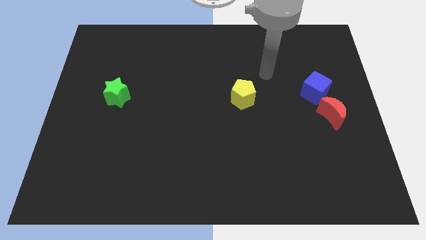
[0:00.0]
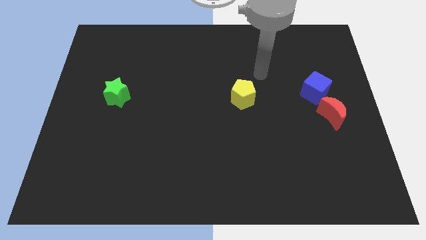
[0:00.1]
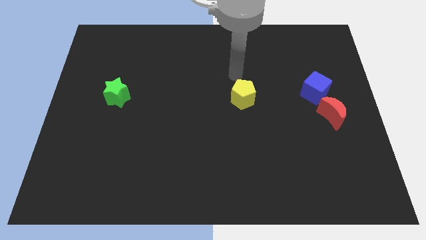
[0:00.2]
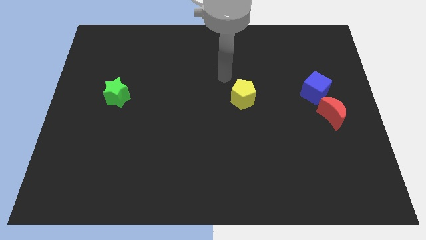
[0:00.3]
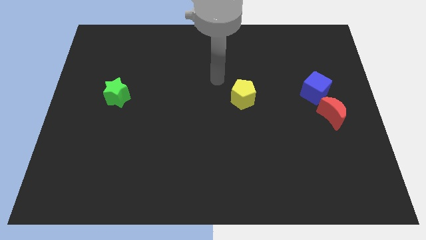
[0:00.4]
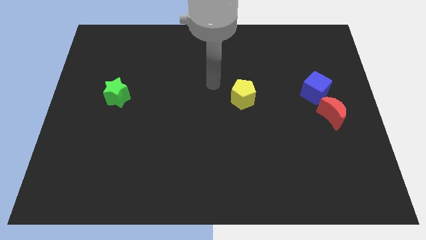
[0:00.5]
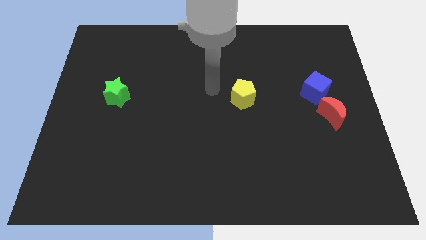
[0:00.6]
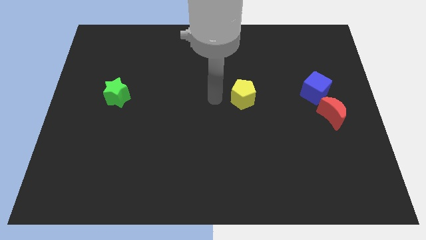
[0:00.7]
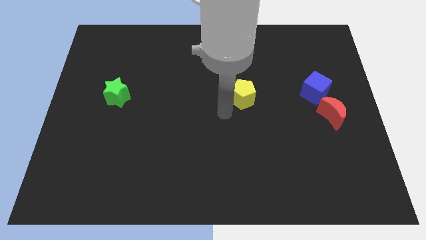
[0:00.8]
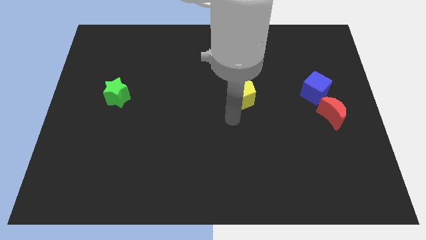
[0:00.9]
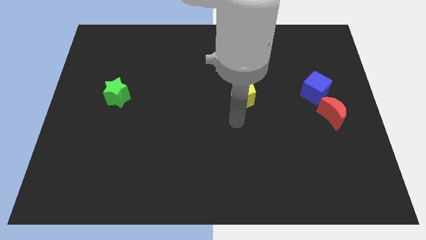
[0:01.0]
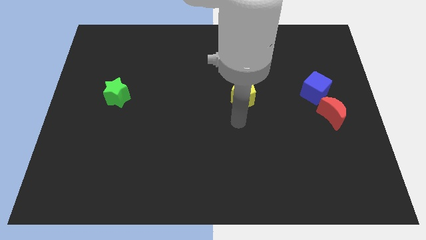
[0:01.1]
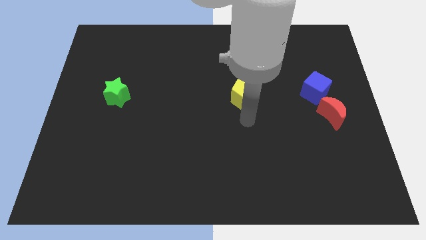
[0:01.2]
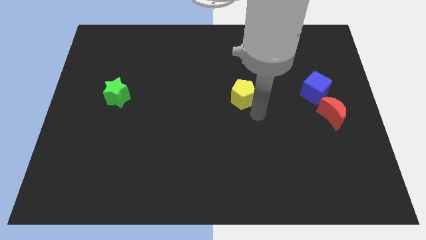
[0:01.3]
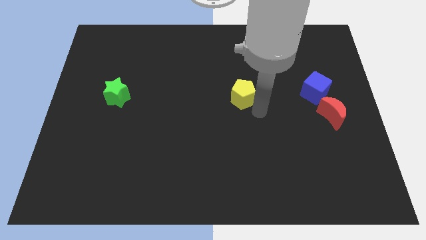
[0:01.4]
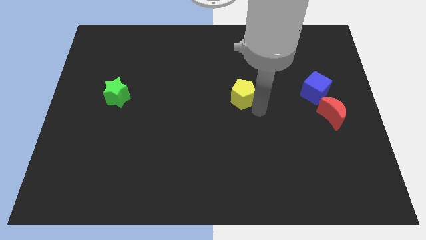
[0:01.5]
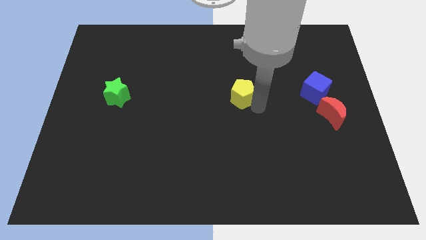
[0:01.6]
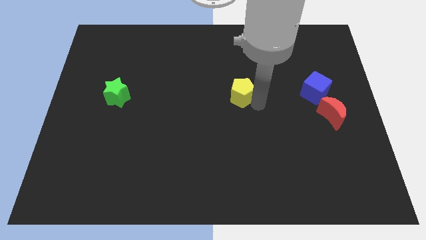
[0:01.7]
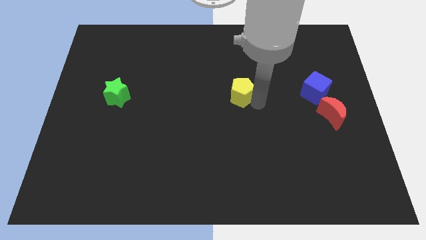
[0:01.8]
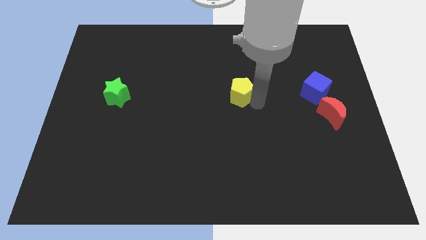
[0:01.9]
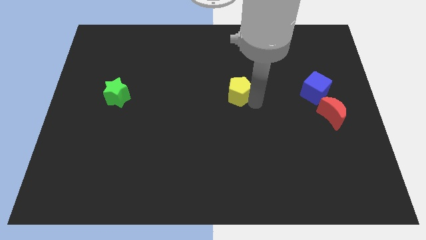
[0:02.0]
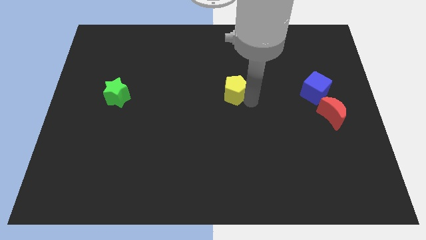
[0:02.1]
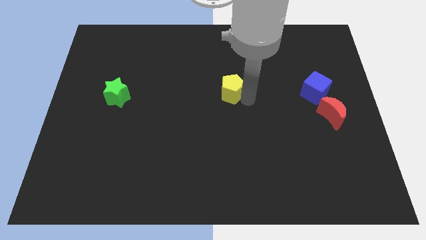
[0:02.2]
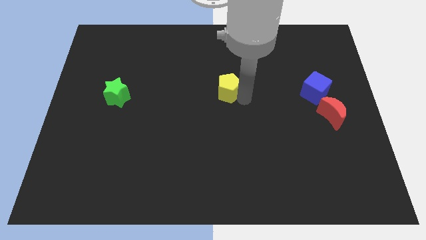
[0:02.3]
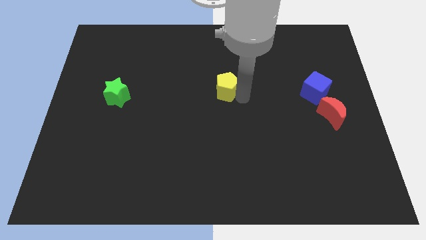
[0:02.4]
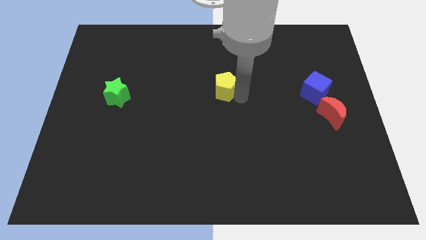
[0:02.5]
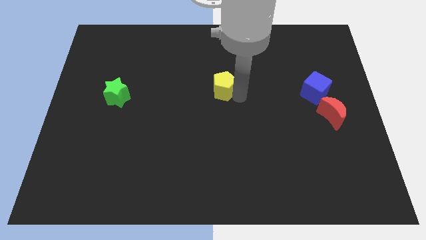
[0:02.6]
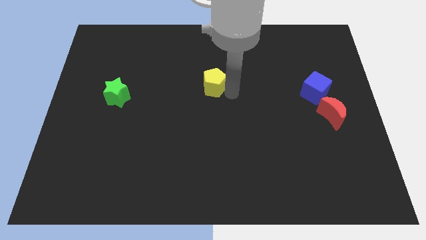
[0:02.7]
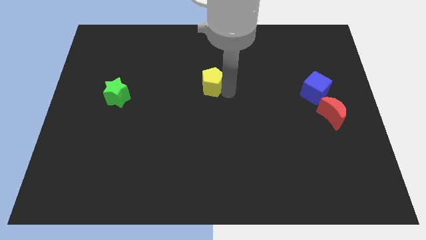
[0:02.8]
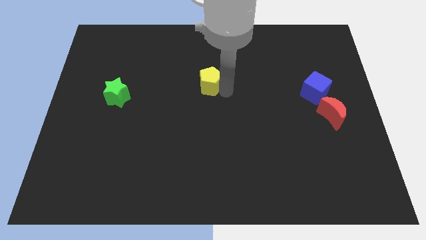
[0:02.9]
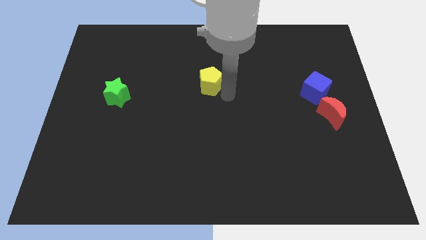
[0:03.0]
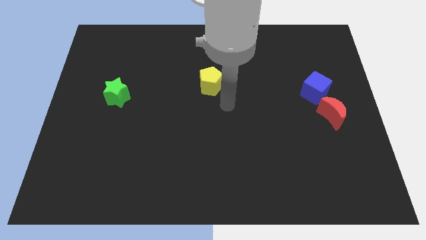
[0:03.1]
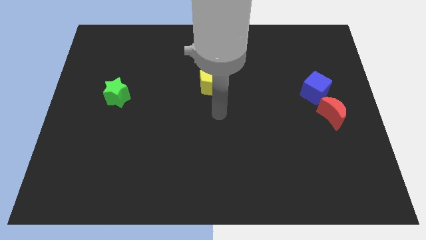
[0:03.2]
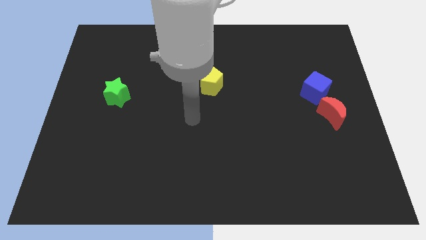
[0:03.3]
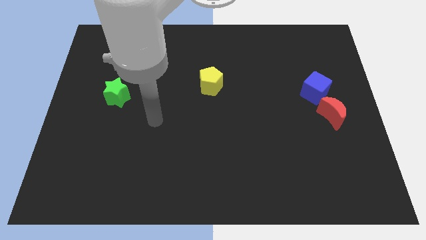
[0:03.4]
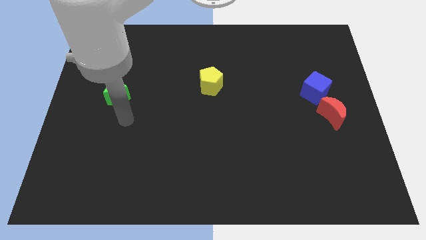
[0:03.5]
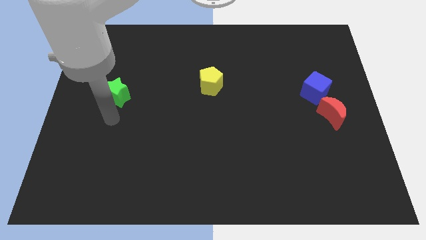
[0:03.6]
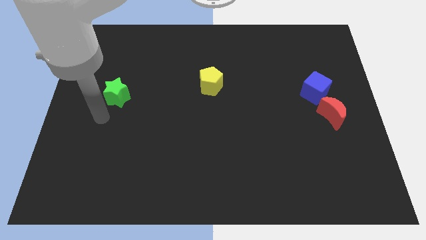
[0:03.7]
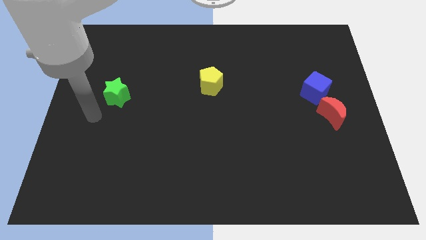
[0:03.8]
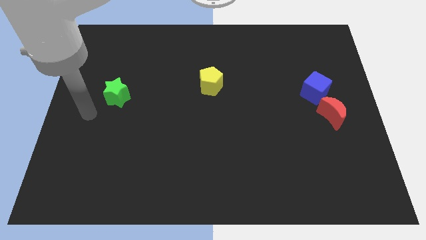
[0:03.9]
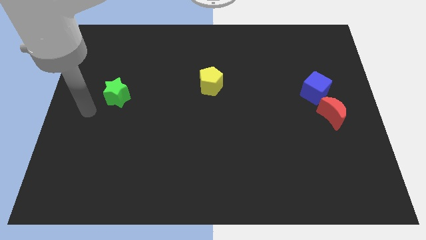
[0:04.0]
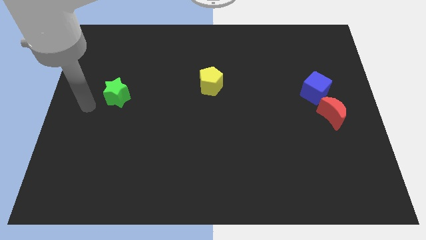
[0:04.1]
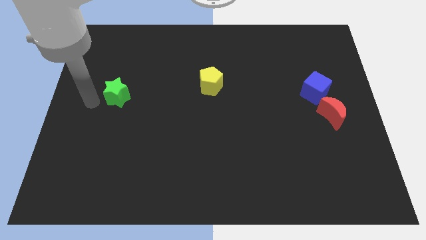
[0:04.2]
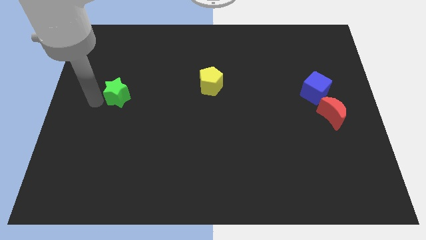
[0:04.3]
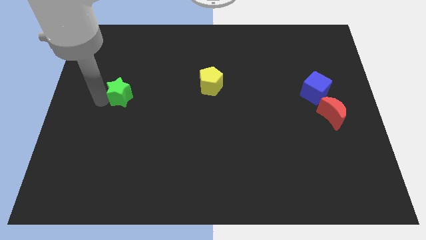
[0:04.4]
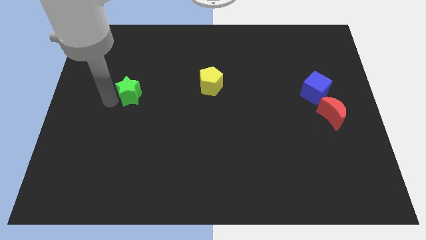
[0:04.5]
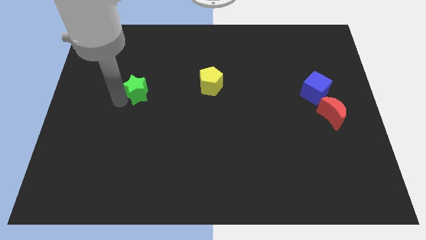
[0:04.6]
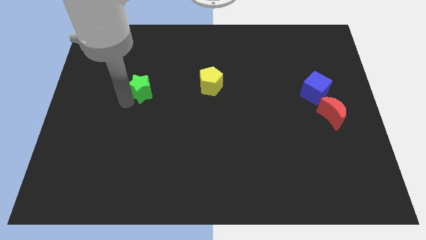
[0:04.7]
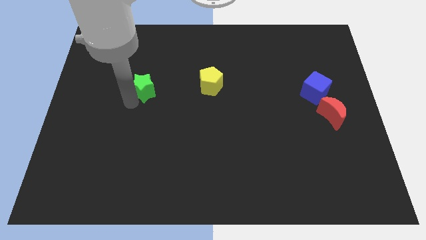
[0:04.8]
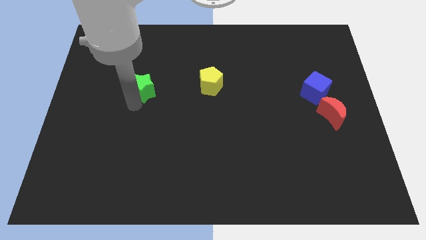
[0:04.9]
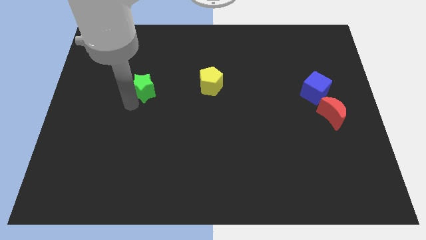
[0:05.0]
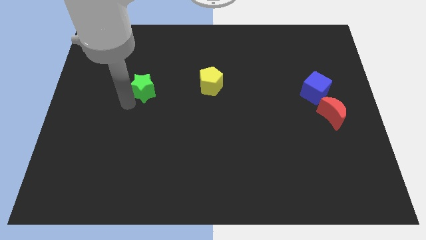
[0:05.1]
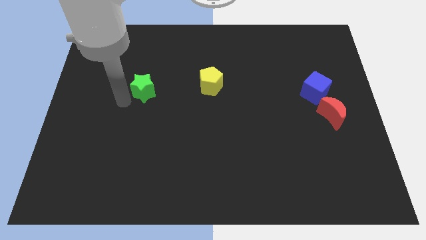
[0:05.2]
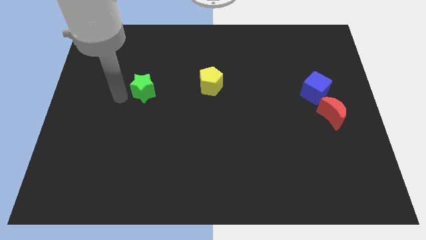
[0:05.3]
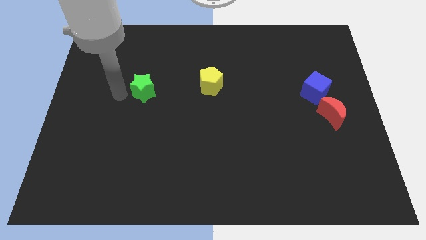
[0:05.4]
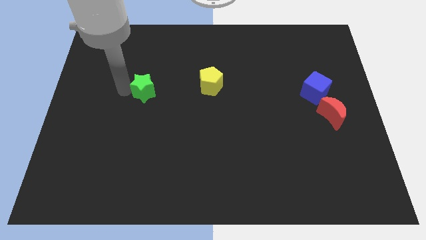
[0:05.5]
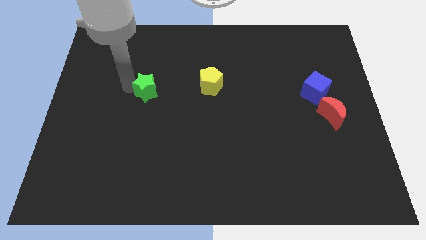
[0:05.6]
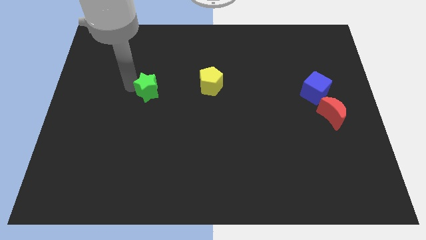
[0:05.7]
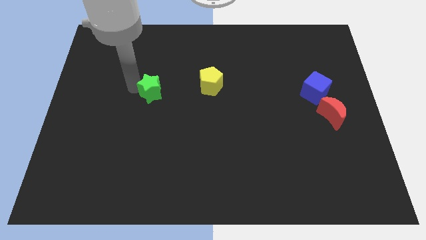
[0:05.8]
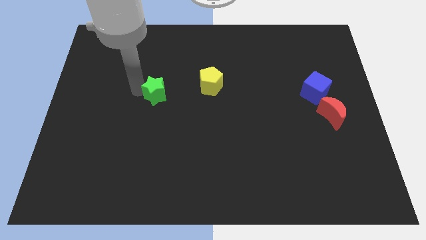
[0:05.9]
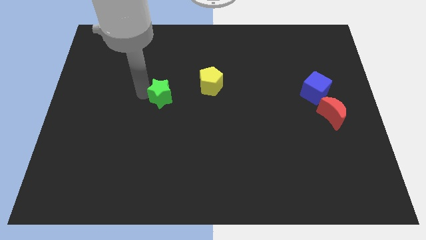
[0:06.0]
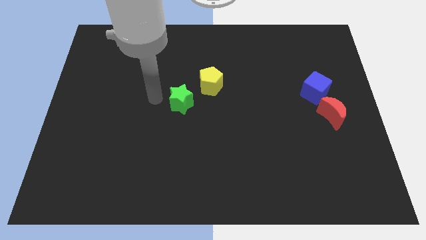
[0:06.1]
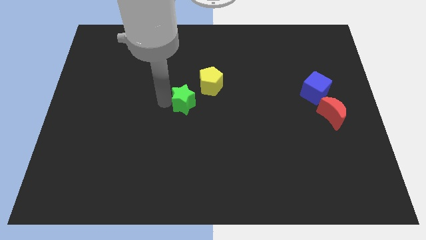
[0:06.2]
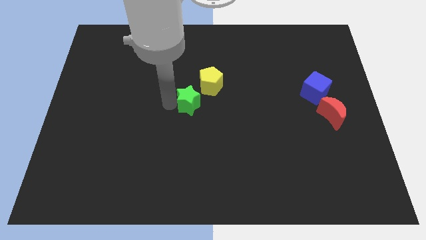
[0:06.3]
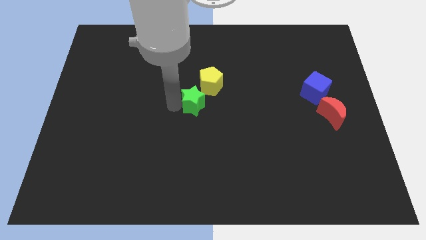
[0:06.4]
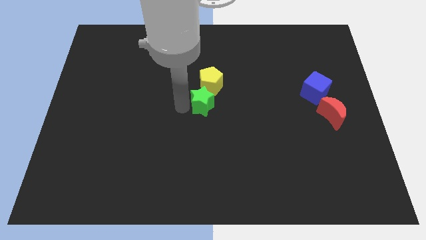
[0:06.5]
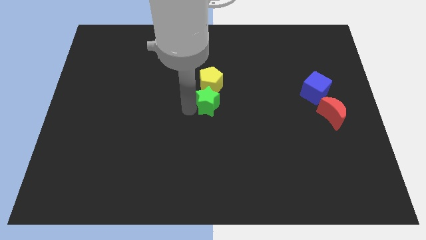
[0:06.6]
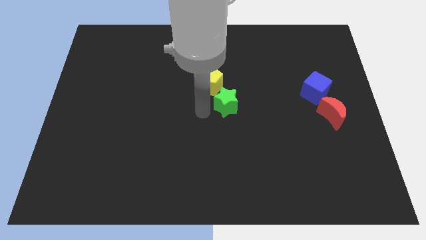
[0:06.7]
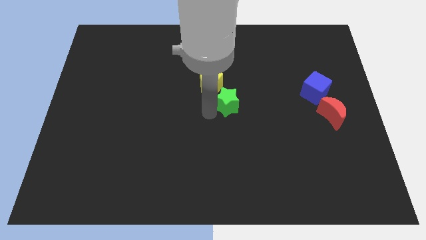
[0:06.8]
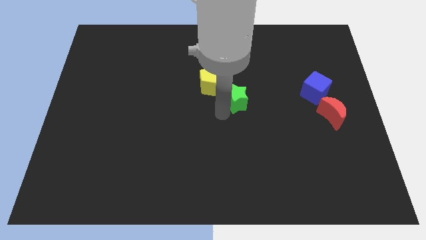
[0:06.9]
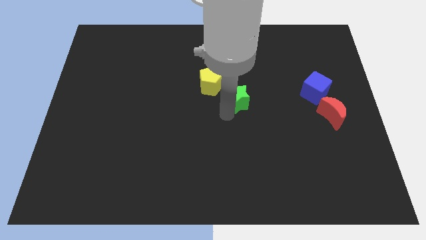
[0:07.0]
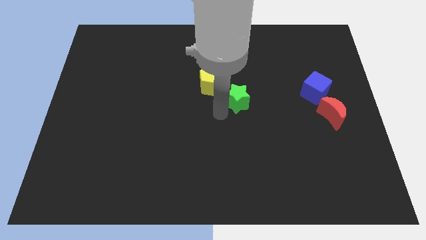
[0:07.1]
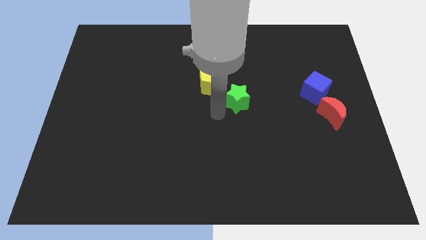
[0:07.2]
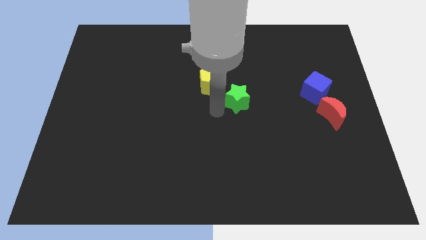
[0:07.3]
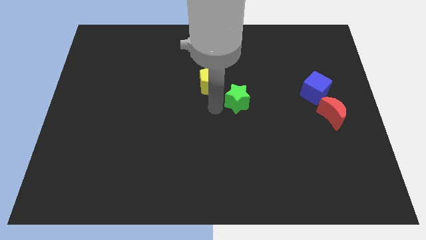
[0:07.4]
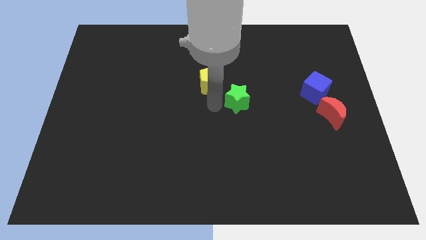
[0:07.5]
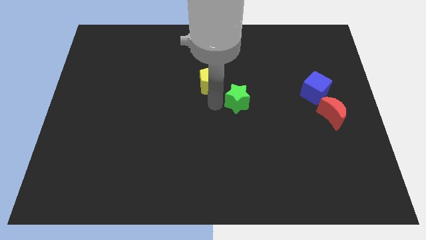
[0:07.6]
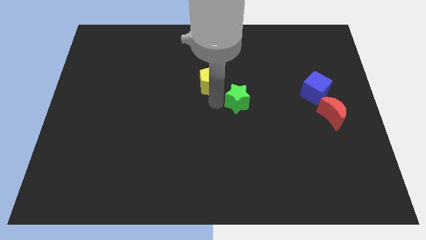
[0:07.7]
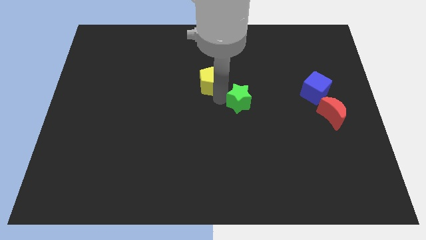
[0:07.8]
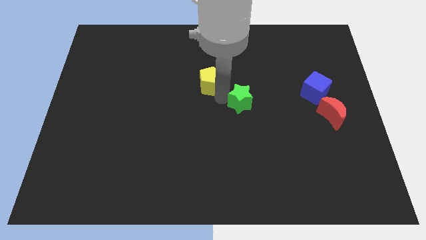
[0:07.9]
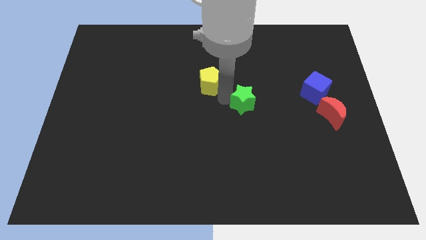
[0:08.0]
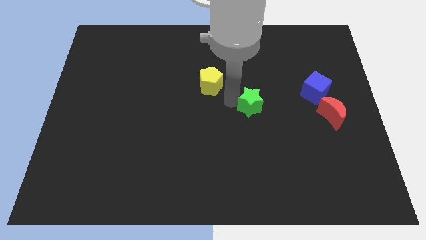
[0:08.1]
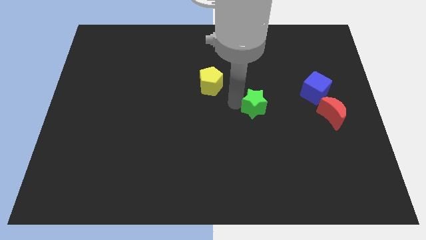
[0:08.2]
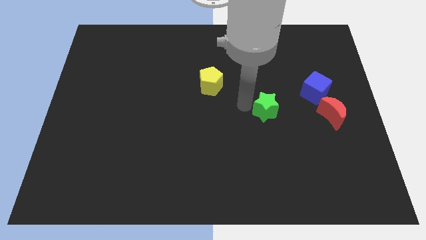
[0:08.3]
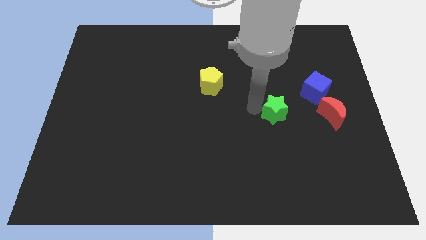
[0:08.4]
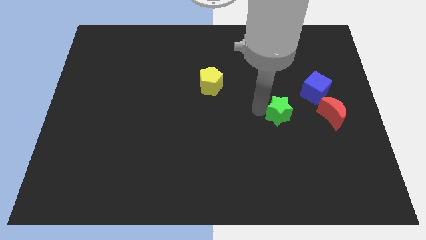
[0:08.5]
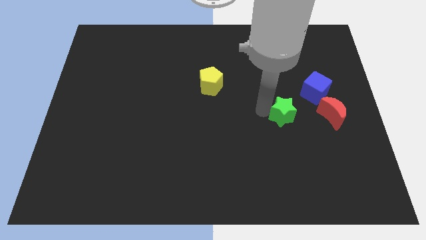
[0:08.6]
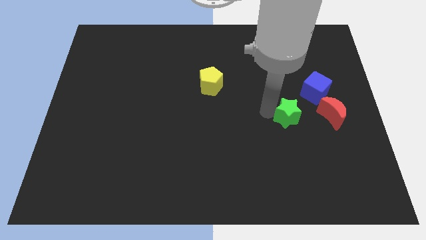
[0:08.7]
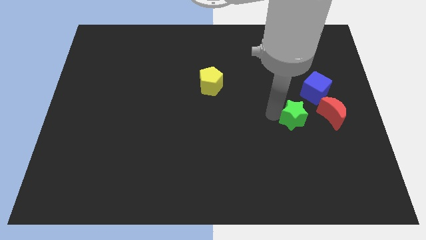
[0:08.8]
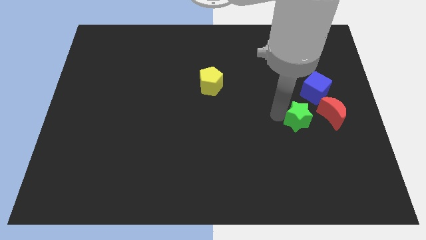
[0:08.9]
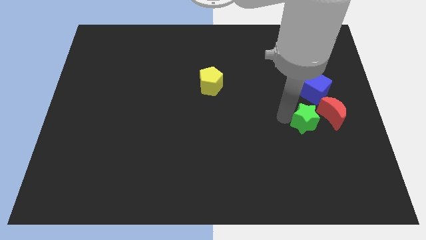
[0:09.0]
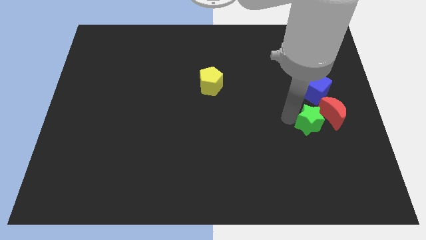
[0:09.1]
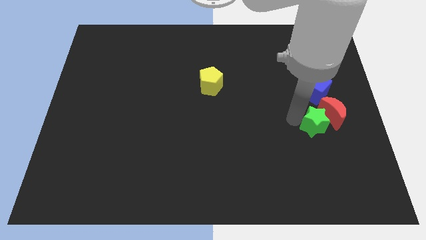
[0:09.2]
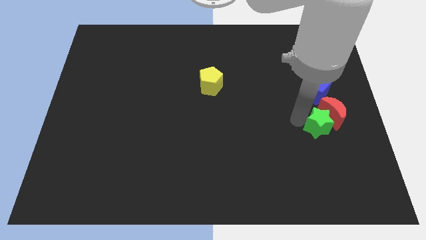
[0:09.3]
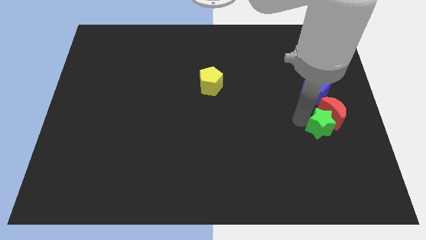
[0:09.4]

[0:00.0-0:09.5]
push the green star to the red moon
